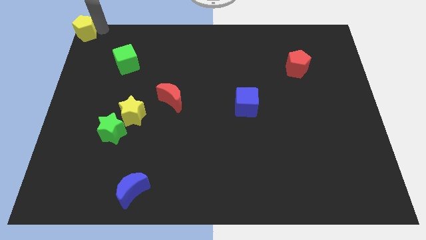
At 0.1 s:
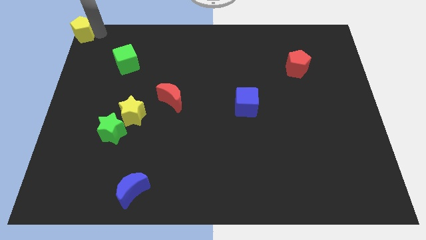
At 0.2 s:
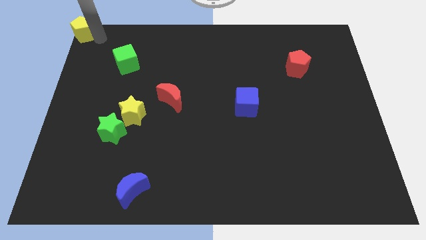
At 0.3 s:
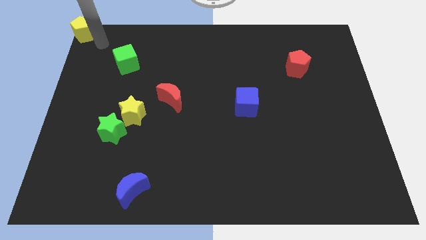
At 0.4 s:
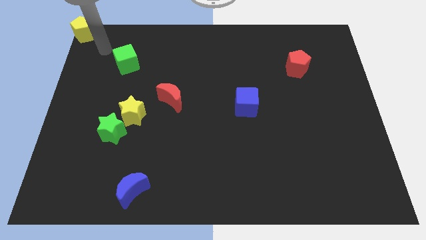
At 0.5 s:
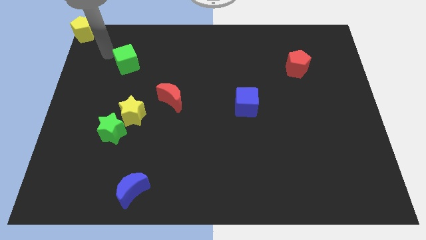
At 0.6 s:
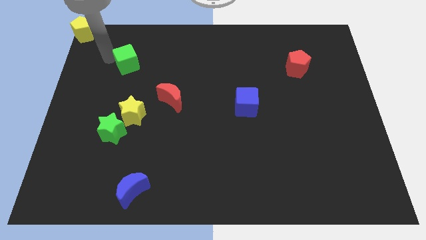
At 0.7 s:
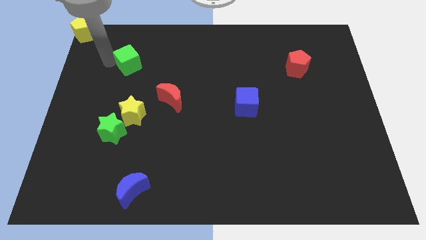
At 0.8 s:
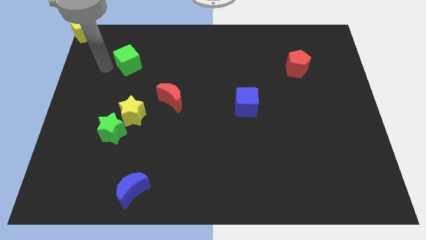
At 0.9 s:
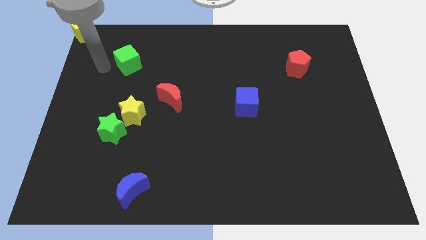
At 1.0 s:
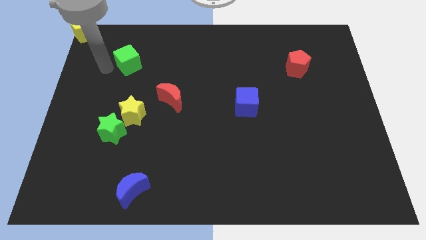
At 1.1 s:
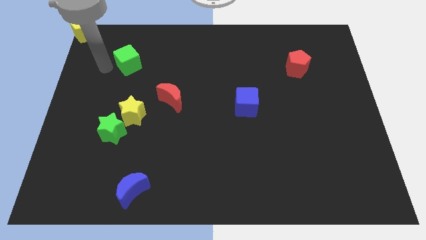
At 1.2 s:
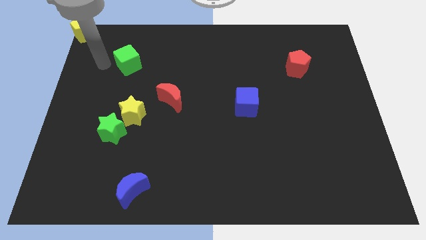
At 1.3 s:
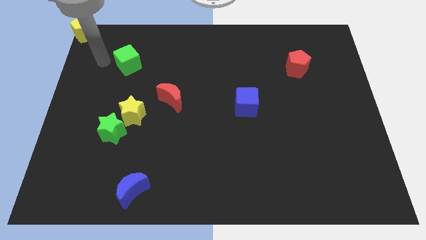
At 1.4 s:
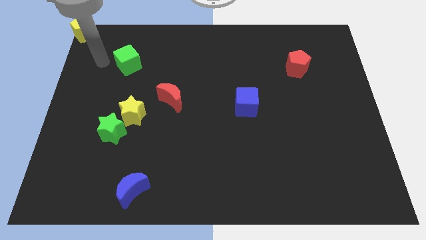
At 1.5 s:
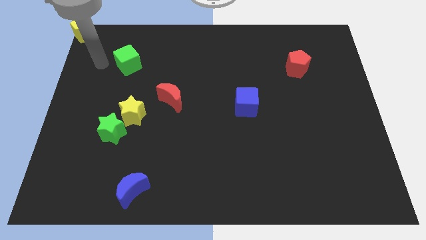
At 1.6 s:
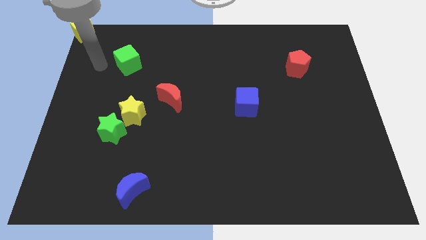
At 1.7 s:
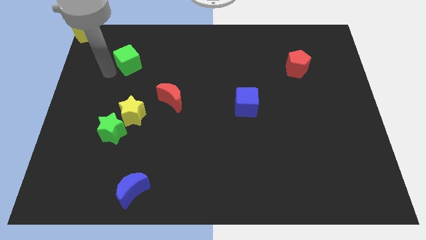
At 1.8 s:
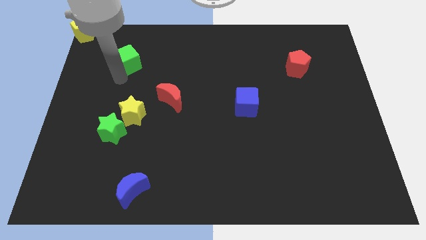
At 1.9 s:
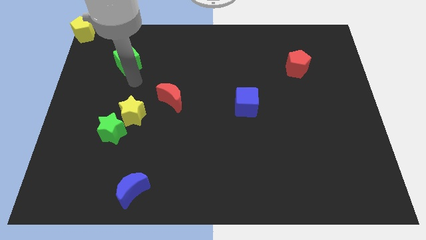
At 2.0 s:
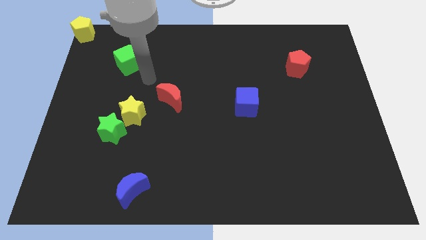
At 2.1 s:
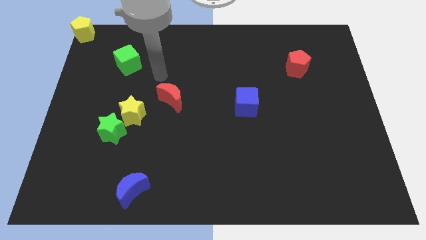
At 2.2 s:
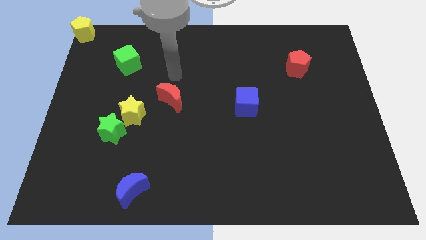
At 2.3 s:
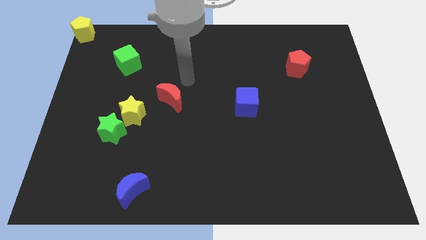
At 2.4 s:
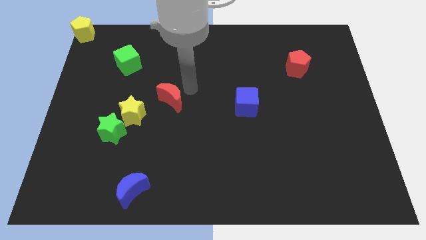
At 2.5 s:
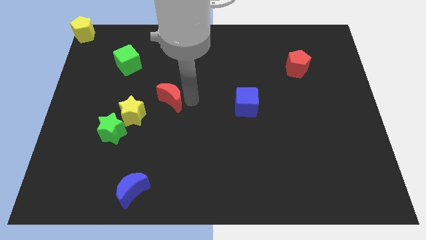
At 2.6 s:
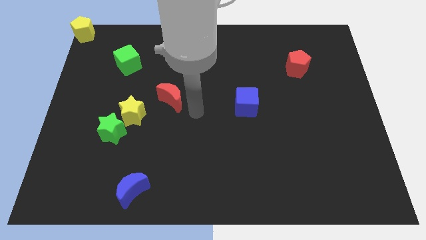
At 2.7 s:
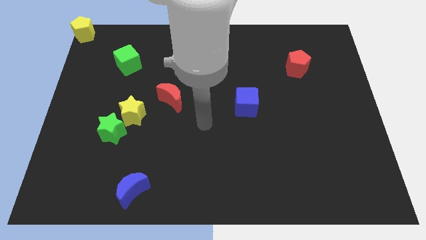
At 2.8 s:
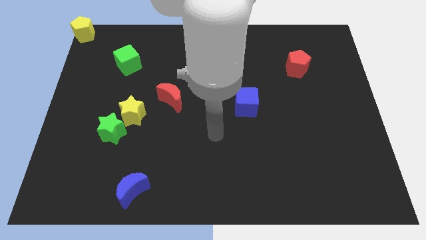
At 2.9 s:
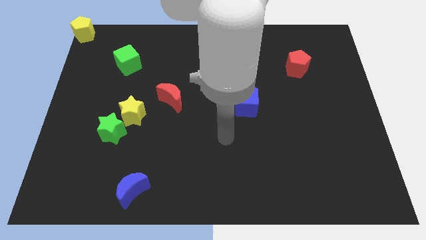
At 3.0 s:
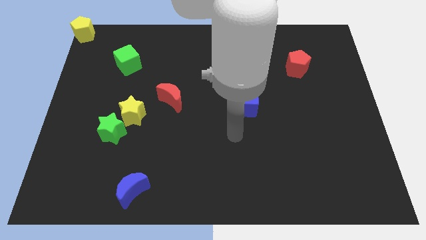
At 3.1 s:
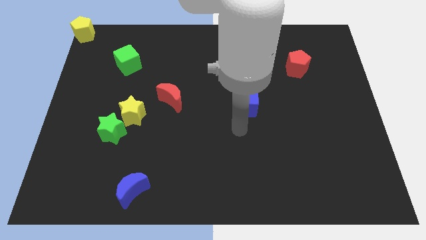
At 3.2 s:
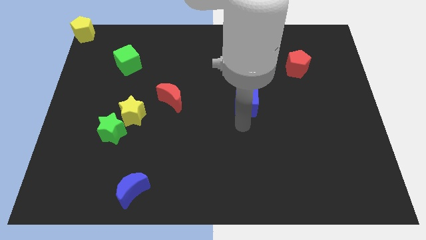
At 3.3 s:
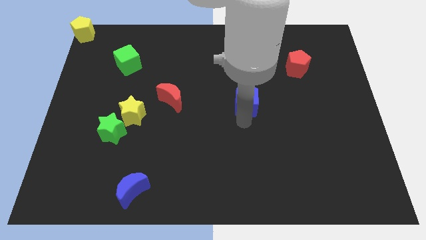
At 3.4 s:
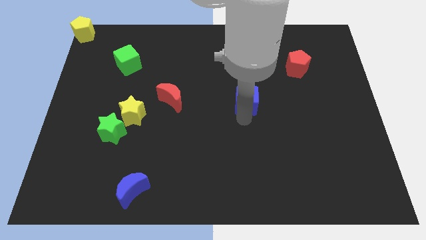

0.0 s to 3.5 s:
move your arm towards the blue cube

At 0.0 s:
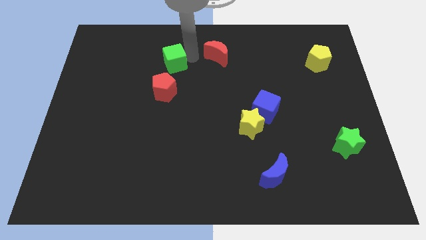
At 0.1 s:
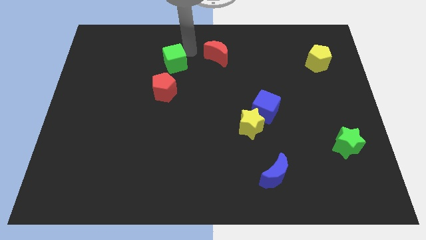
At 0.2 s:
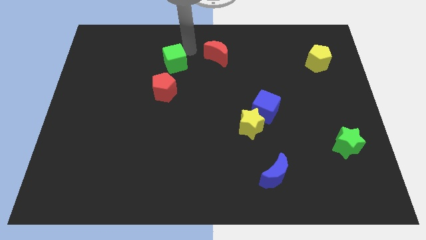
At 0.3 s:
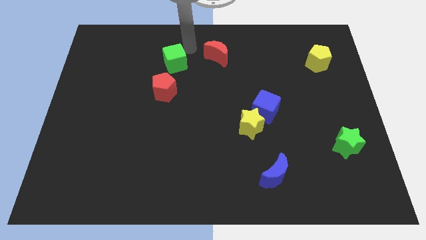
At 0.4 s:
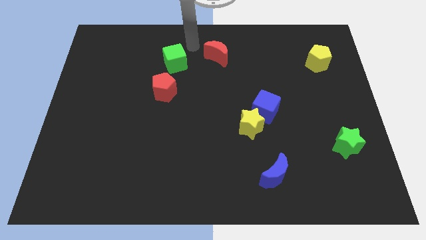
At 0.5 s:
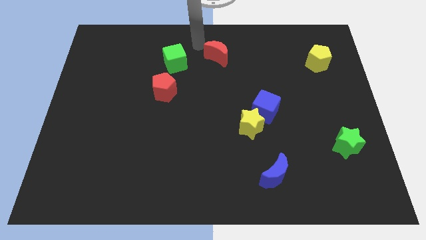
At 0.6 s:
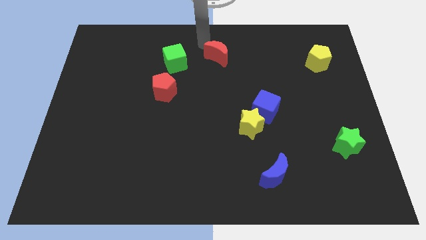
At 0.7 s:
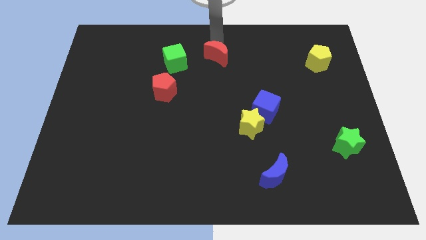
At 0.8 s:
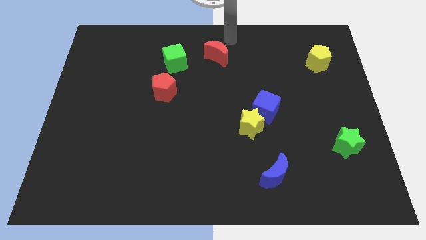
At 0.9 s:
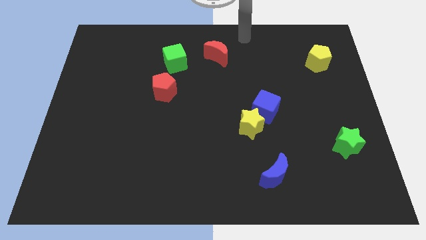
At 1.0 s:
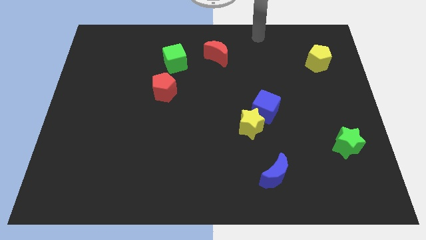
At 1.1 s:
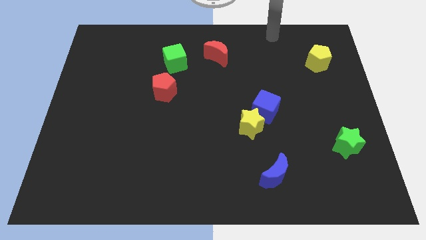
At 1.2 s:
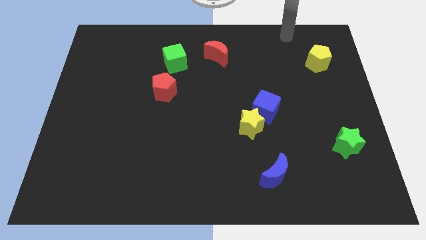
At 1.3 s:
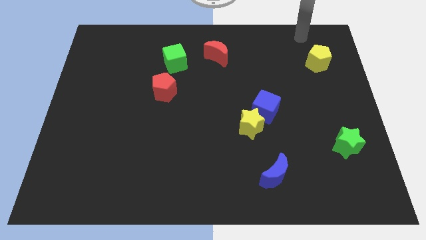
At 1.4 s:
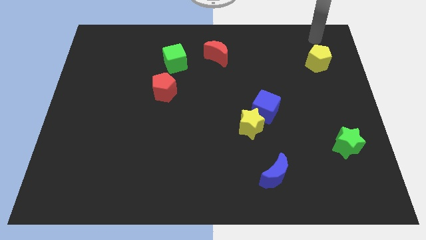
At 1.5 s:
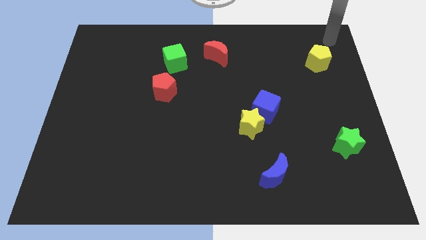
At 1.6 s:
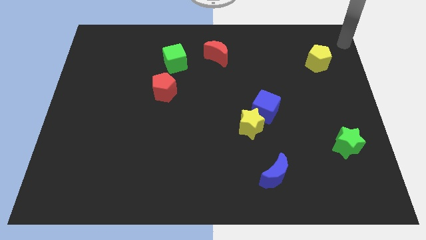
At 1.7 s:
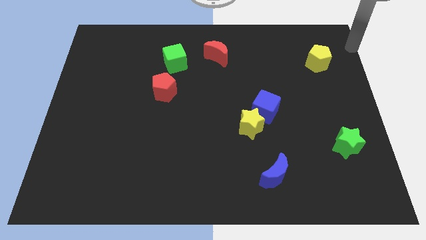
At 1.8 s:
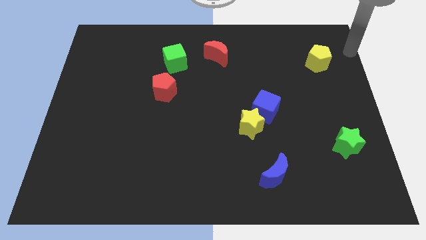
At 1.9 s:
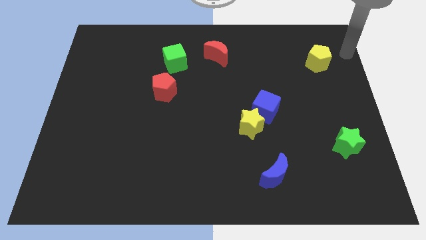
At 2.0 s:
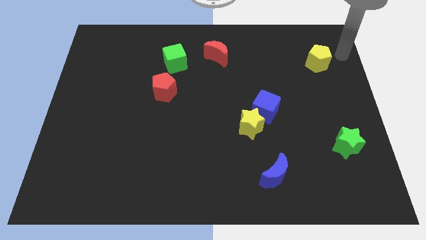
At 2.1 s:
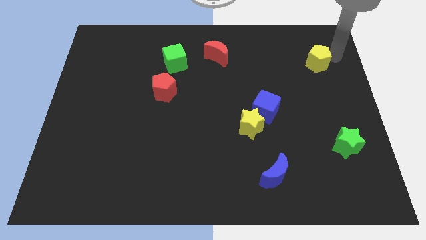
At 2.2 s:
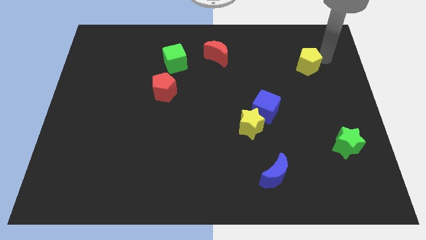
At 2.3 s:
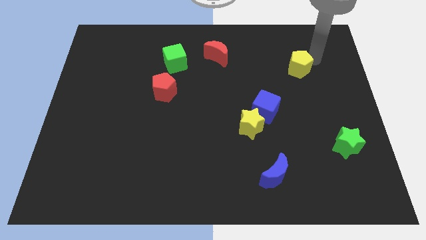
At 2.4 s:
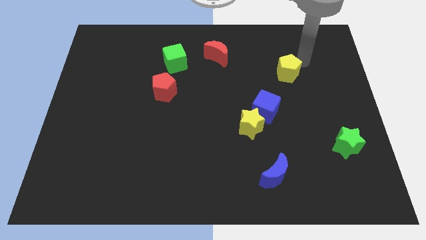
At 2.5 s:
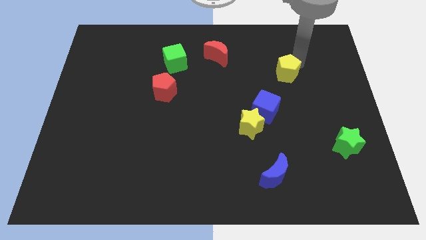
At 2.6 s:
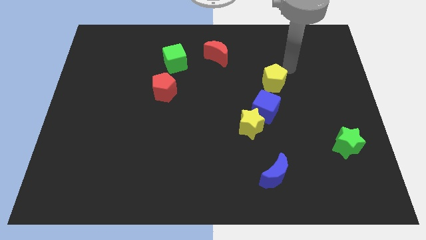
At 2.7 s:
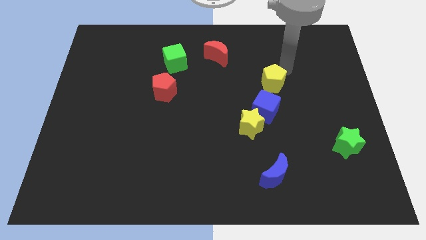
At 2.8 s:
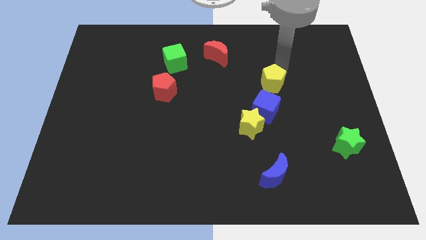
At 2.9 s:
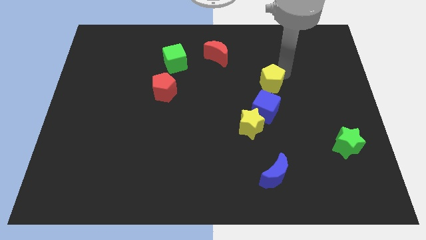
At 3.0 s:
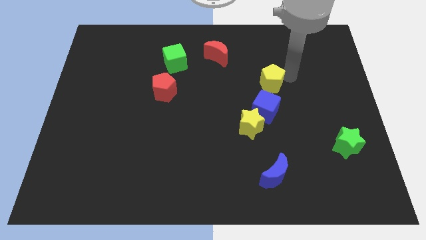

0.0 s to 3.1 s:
pull the yellow pentagon to the top of the blue cube

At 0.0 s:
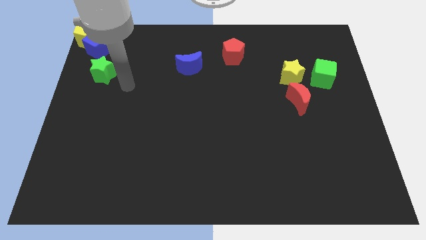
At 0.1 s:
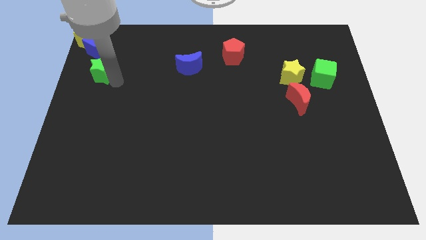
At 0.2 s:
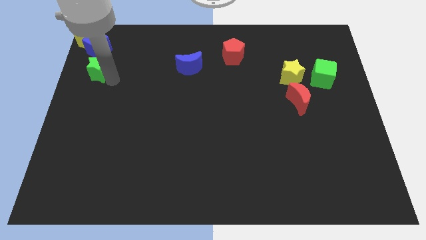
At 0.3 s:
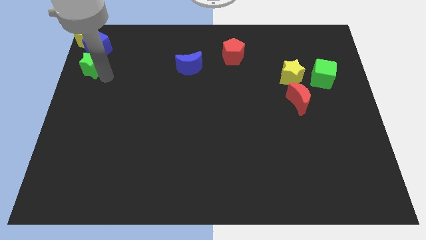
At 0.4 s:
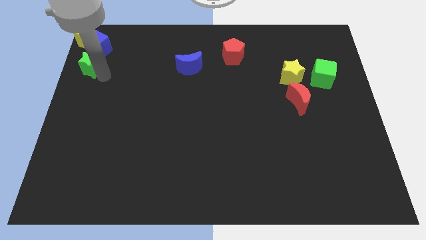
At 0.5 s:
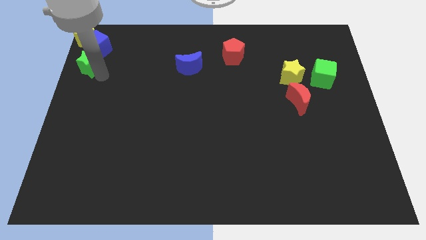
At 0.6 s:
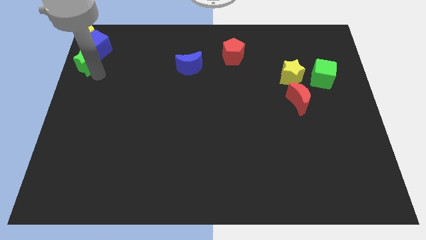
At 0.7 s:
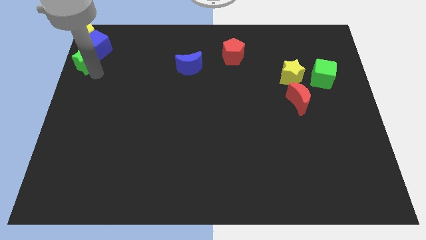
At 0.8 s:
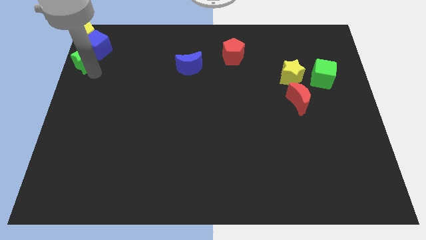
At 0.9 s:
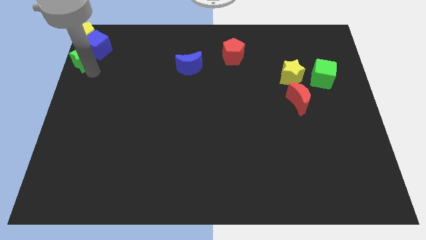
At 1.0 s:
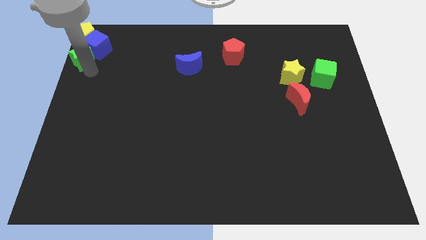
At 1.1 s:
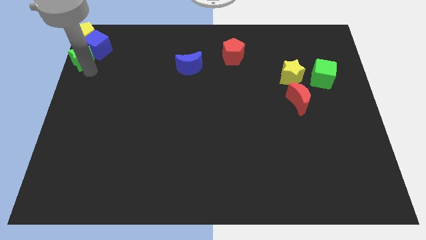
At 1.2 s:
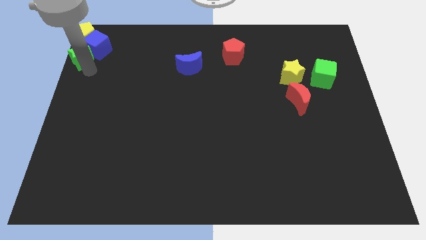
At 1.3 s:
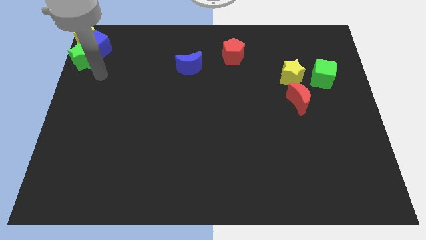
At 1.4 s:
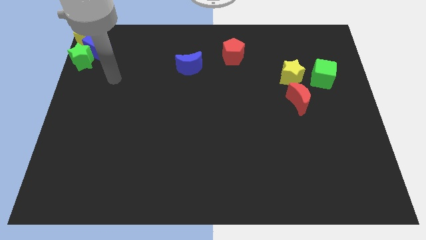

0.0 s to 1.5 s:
push the green star close to the blue cube

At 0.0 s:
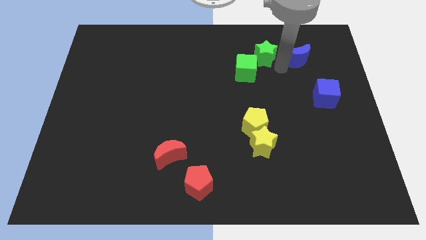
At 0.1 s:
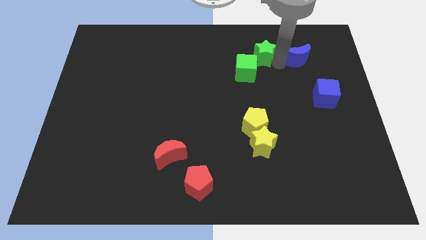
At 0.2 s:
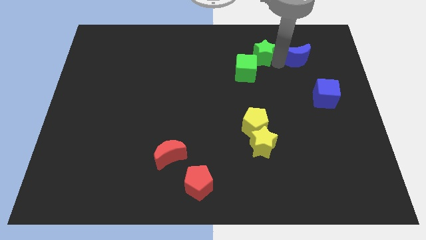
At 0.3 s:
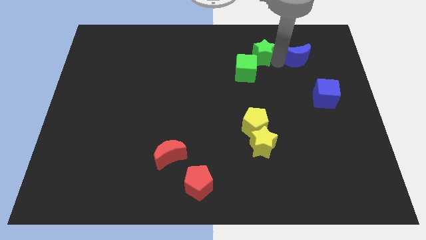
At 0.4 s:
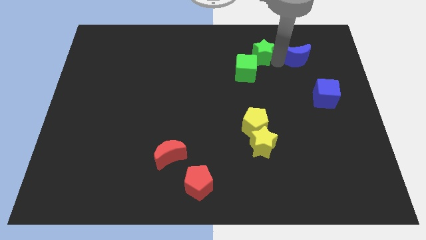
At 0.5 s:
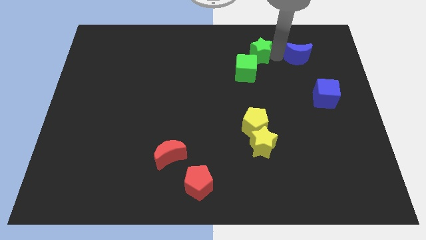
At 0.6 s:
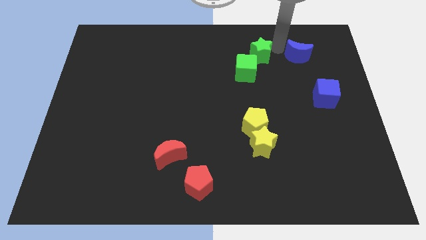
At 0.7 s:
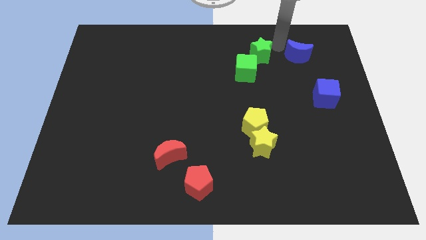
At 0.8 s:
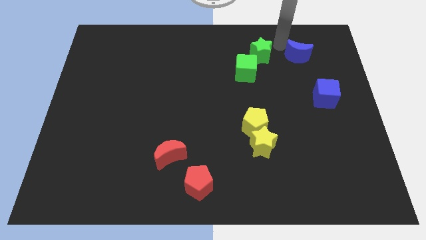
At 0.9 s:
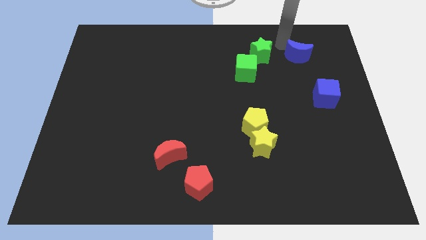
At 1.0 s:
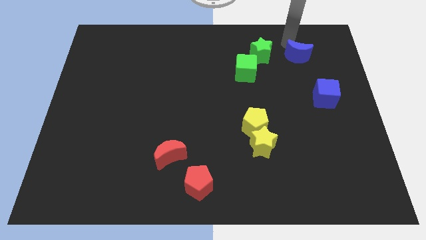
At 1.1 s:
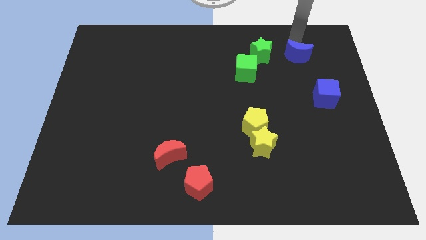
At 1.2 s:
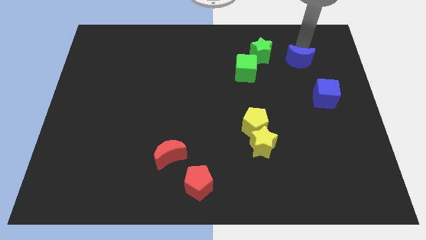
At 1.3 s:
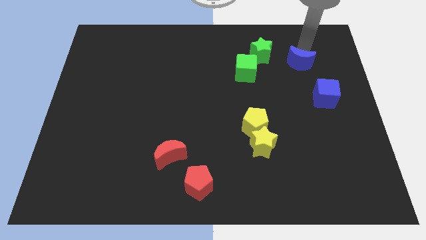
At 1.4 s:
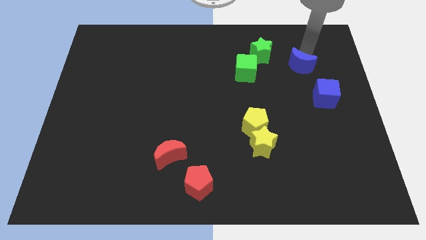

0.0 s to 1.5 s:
separate green star from blue crescent
